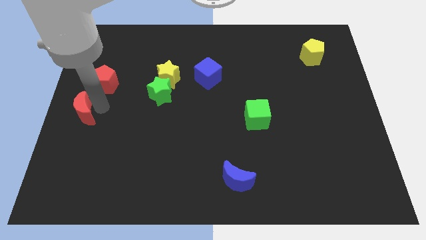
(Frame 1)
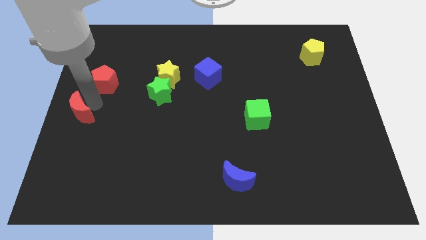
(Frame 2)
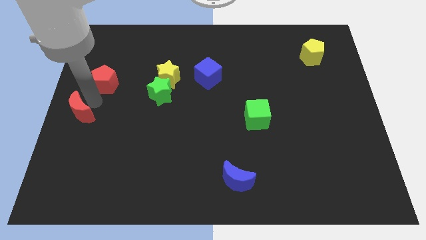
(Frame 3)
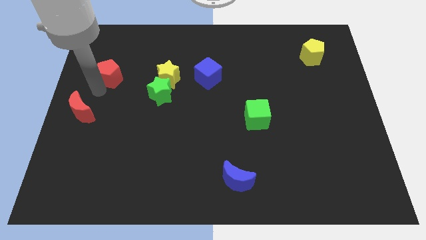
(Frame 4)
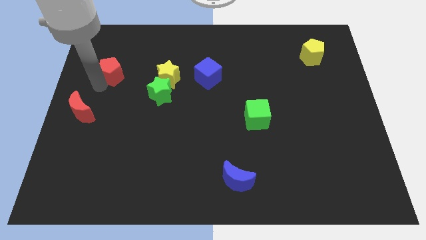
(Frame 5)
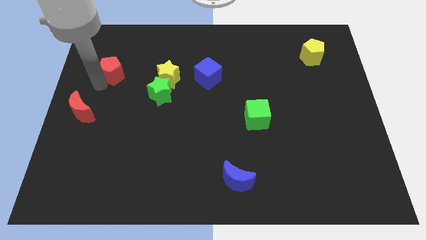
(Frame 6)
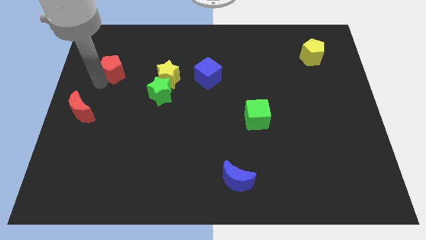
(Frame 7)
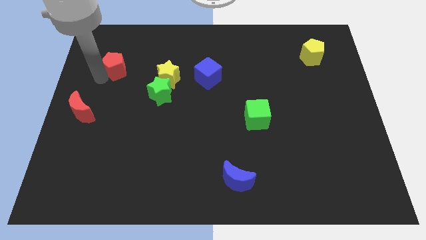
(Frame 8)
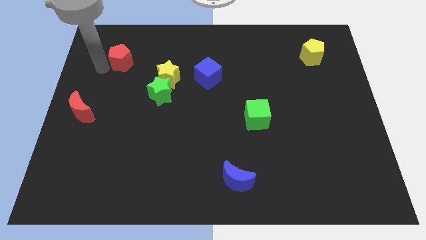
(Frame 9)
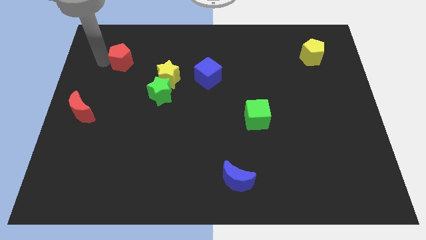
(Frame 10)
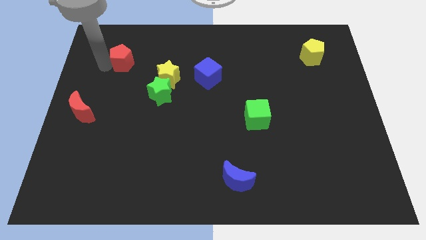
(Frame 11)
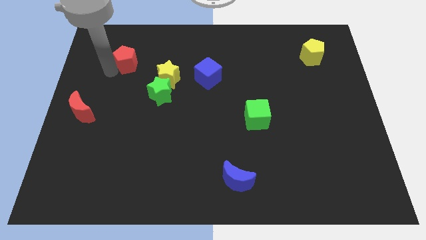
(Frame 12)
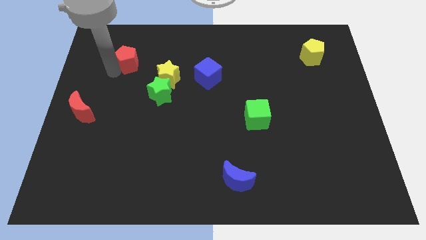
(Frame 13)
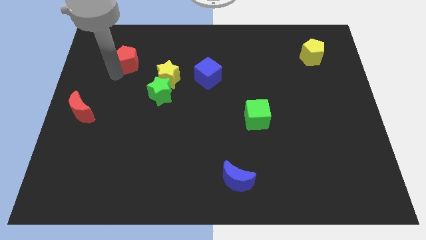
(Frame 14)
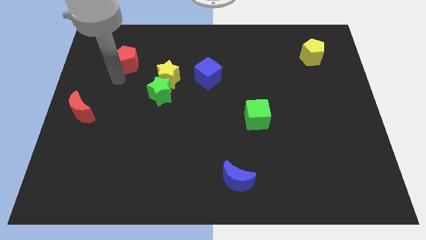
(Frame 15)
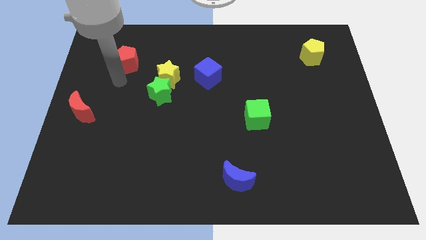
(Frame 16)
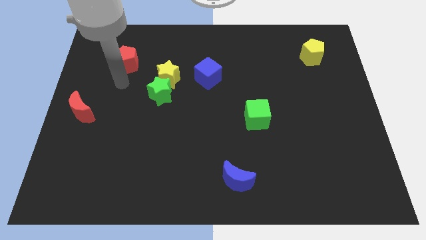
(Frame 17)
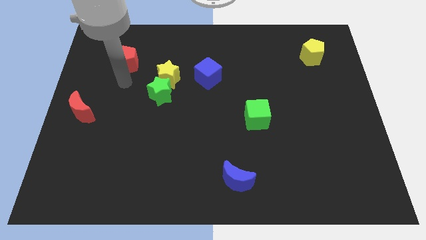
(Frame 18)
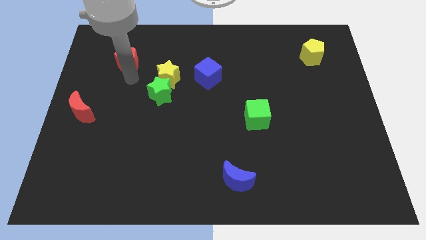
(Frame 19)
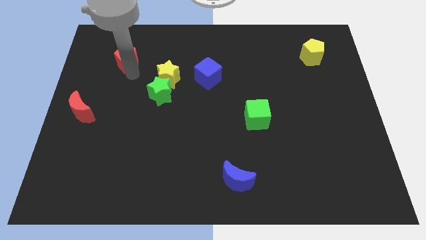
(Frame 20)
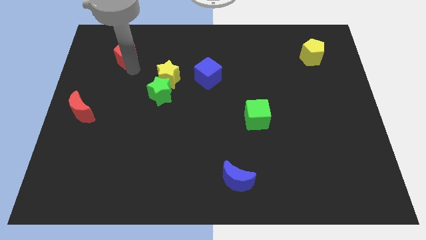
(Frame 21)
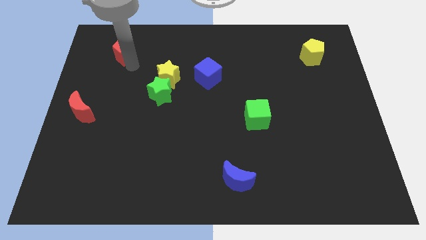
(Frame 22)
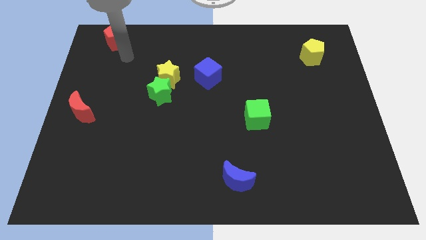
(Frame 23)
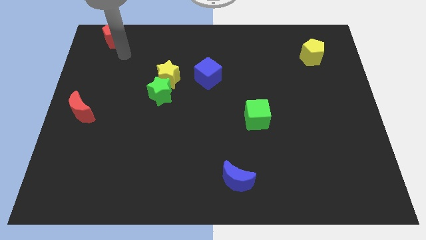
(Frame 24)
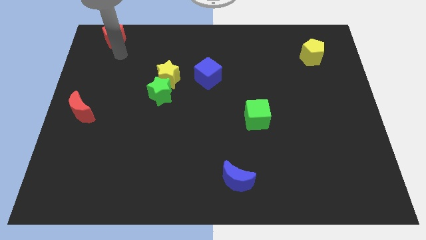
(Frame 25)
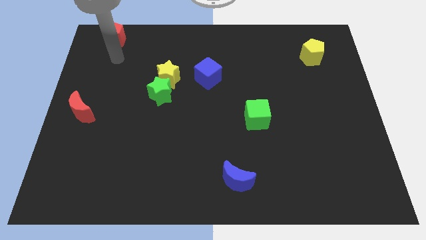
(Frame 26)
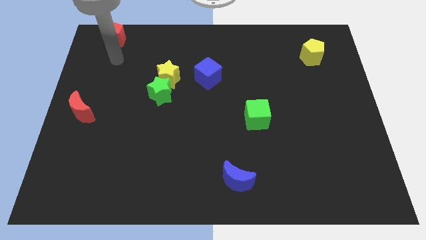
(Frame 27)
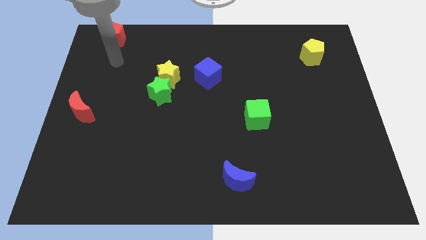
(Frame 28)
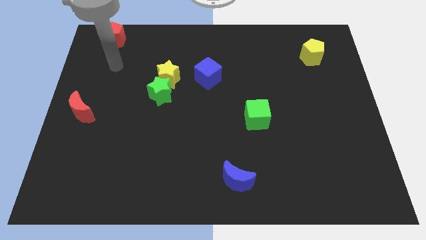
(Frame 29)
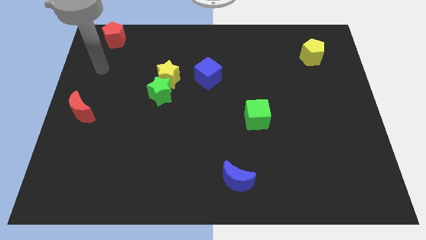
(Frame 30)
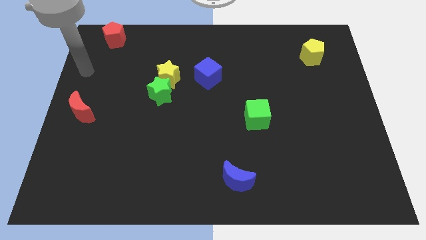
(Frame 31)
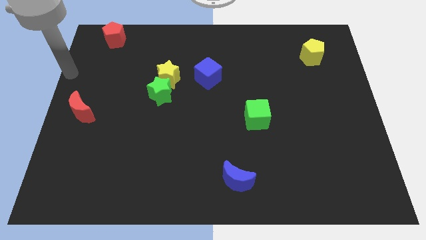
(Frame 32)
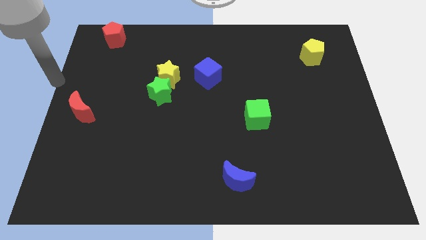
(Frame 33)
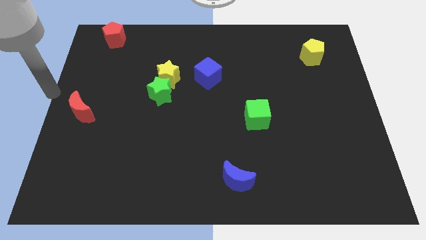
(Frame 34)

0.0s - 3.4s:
place red pentagon on top left corner

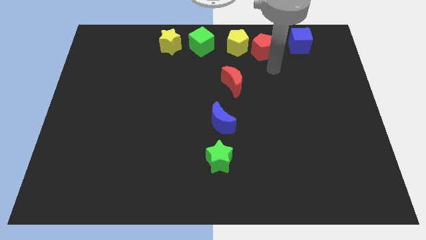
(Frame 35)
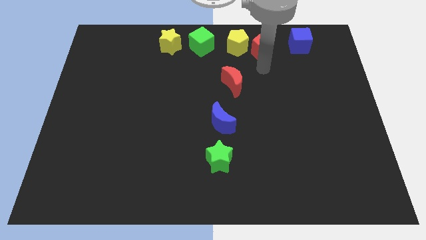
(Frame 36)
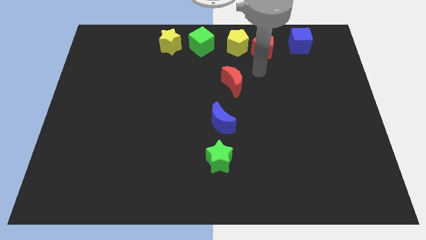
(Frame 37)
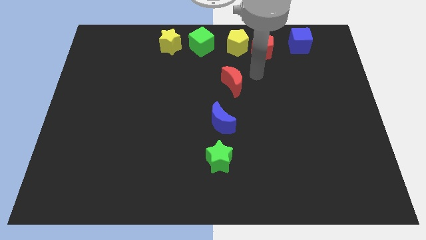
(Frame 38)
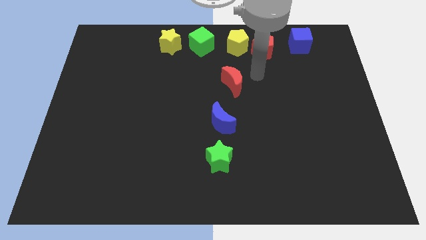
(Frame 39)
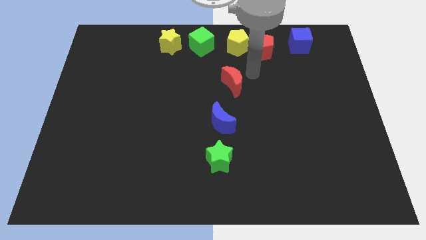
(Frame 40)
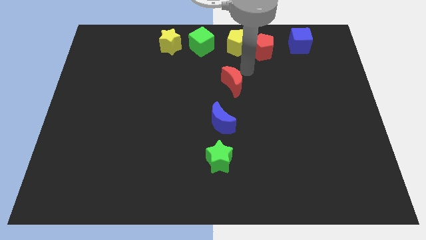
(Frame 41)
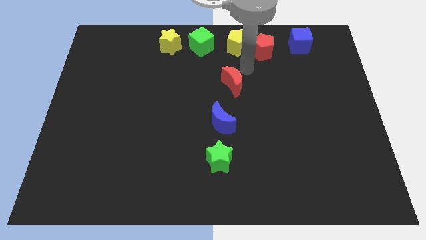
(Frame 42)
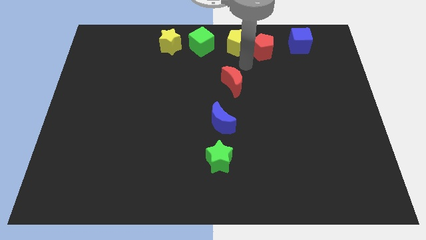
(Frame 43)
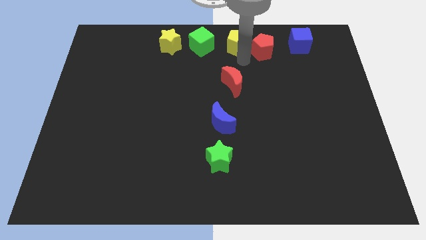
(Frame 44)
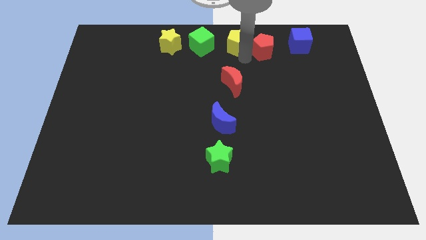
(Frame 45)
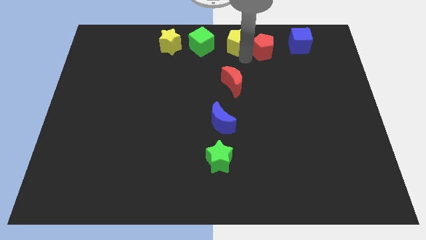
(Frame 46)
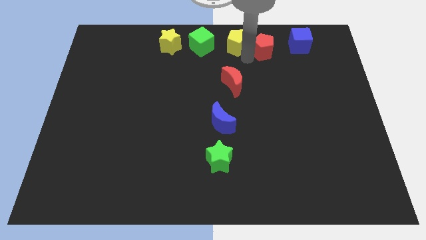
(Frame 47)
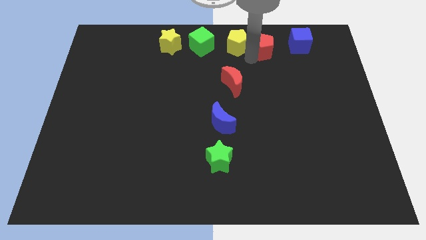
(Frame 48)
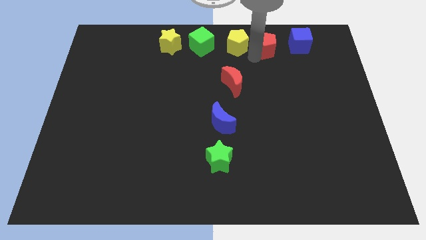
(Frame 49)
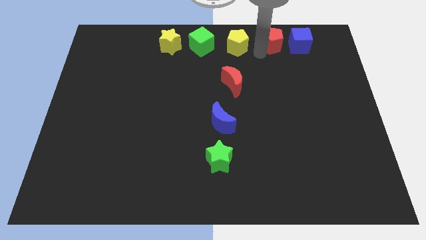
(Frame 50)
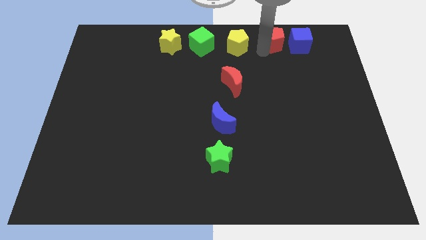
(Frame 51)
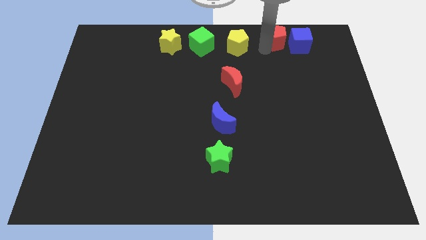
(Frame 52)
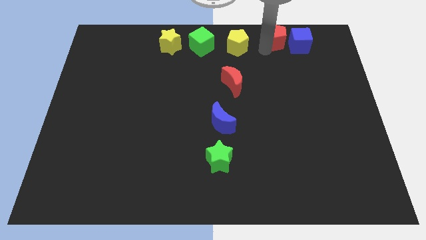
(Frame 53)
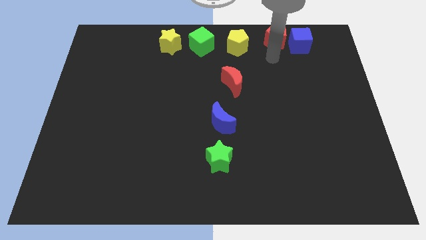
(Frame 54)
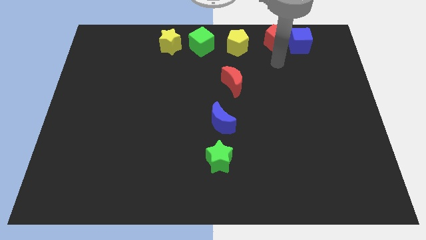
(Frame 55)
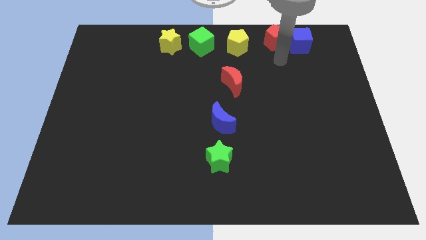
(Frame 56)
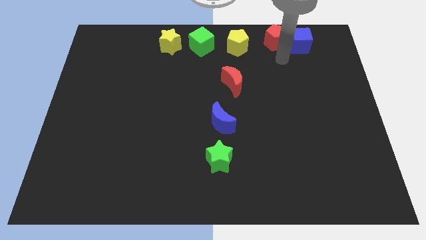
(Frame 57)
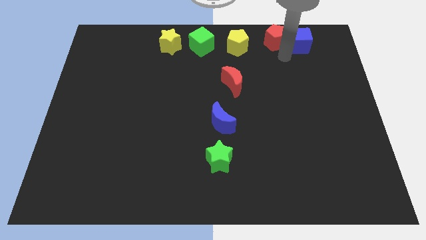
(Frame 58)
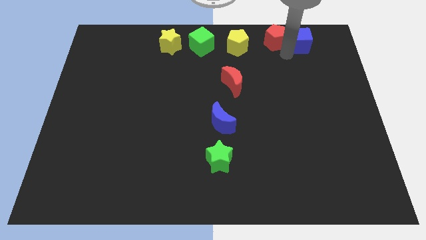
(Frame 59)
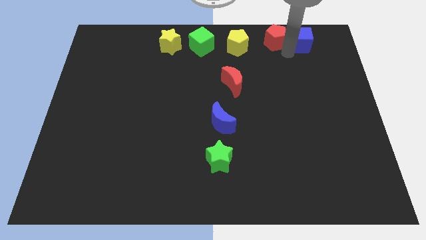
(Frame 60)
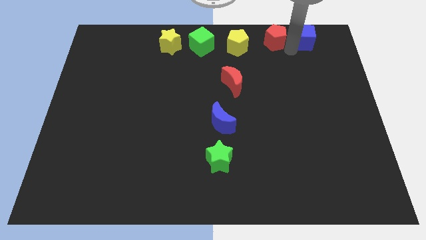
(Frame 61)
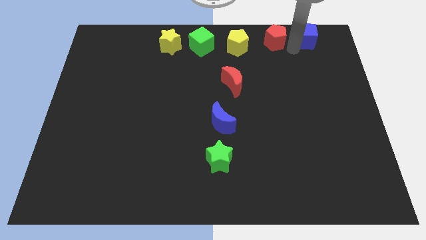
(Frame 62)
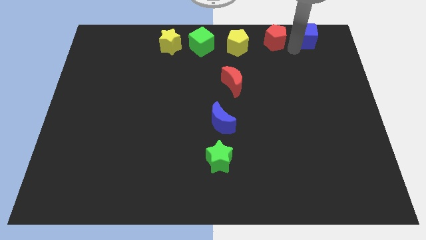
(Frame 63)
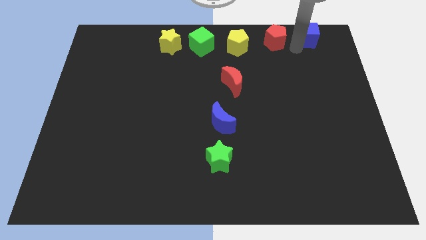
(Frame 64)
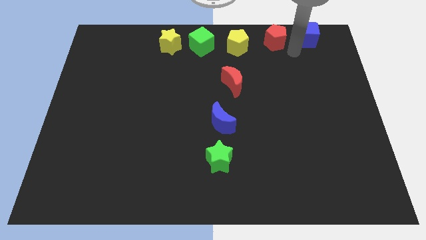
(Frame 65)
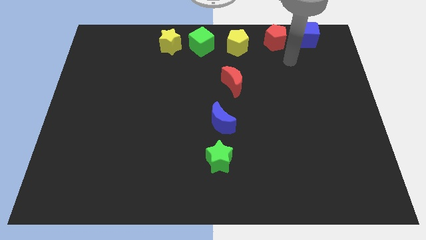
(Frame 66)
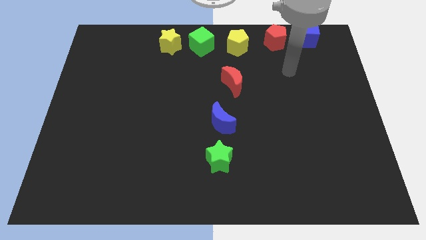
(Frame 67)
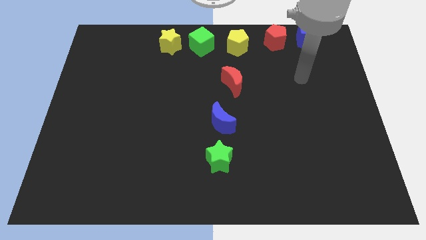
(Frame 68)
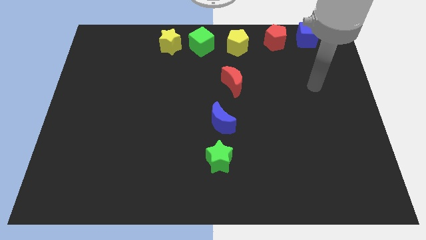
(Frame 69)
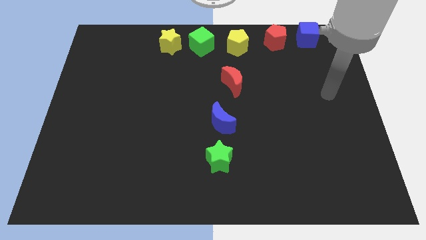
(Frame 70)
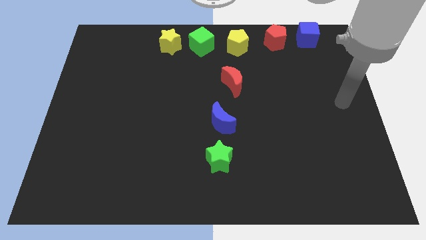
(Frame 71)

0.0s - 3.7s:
push the red pentagon and blue cube upwards slightly

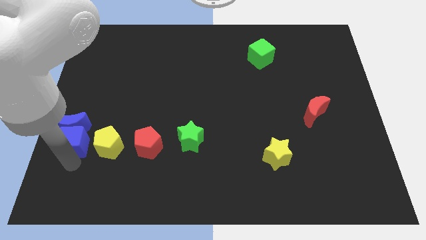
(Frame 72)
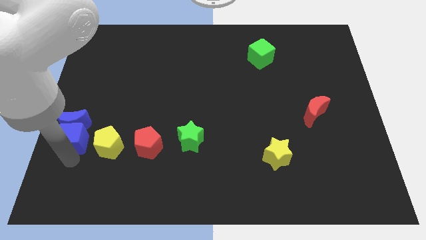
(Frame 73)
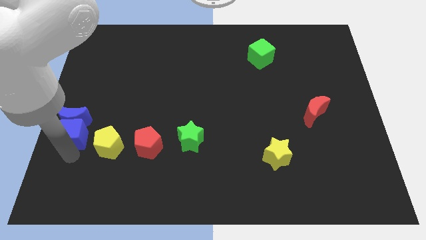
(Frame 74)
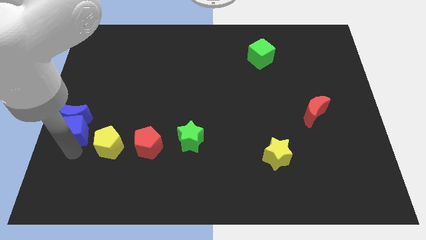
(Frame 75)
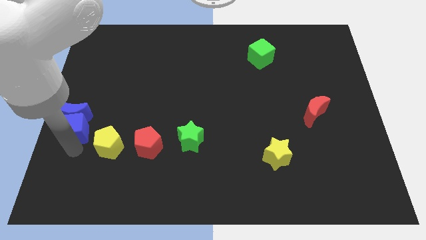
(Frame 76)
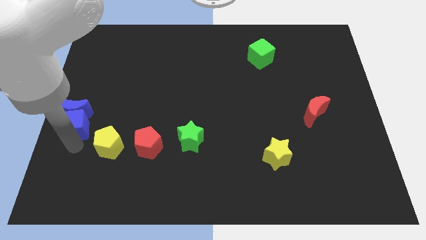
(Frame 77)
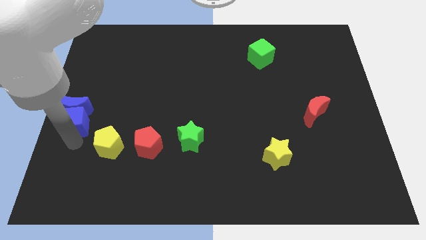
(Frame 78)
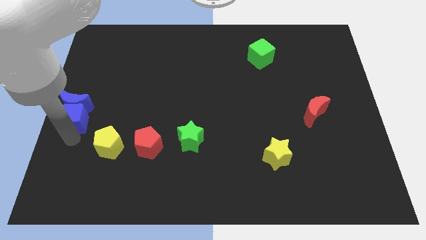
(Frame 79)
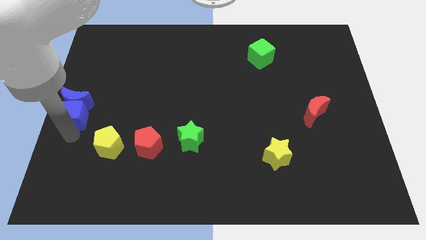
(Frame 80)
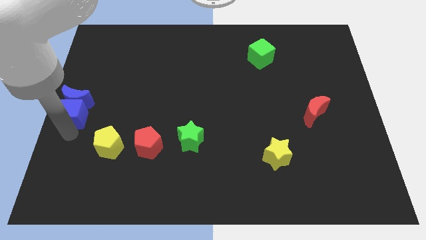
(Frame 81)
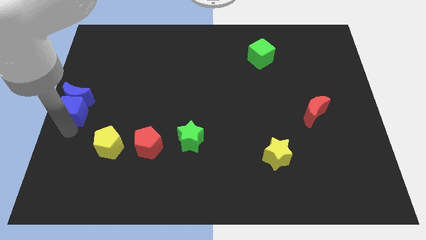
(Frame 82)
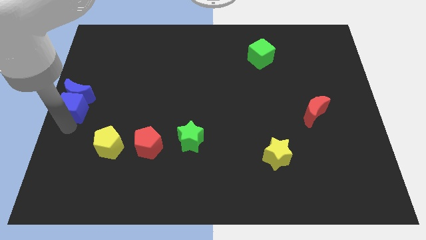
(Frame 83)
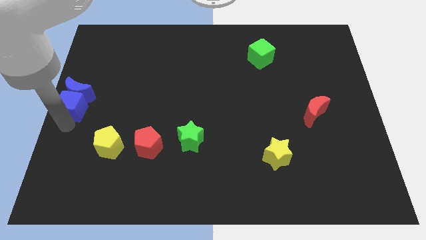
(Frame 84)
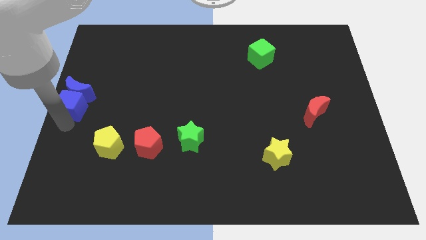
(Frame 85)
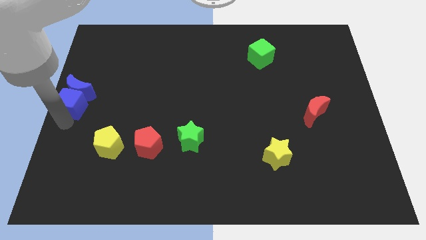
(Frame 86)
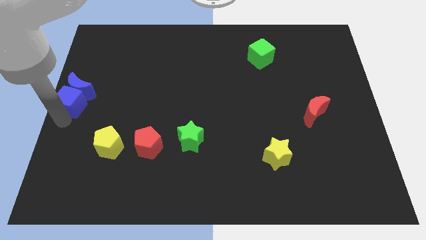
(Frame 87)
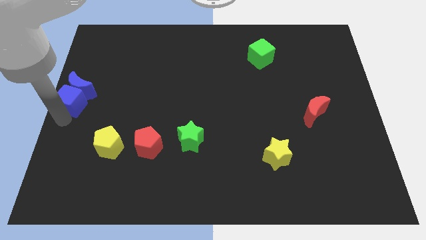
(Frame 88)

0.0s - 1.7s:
place the blue blocks at the left center of the board
